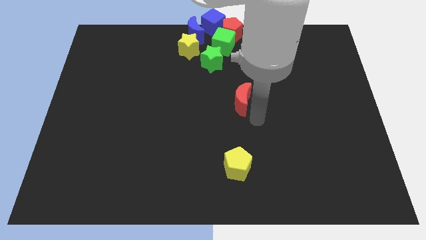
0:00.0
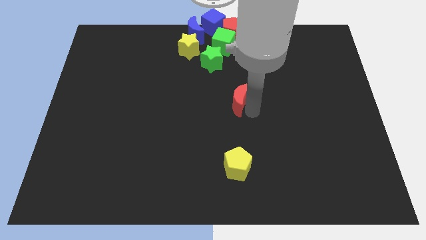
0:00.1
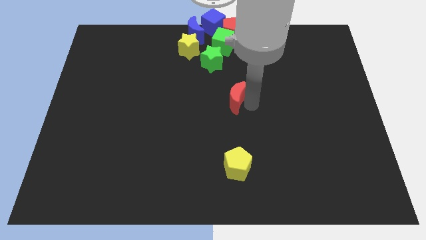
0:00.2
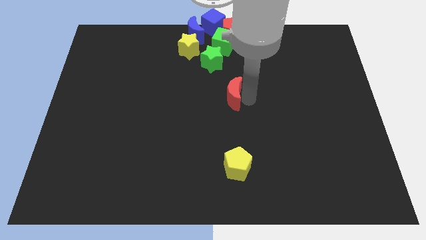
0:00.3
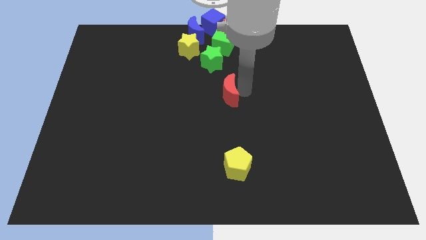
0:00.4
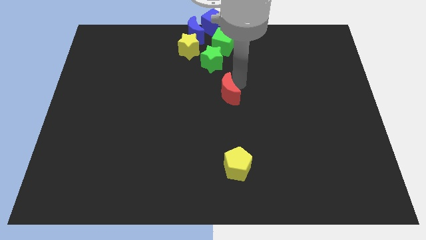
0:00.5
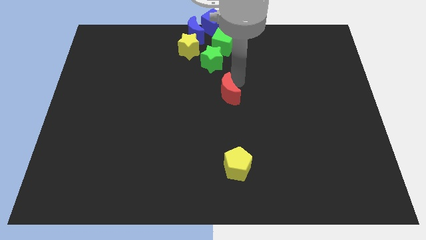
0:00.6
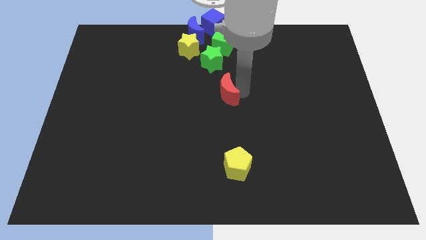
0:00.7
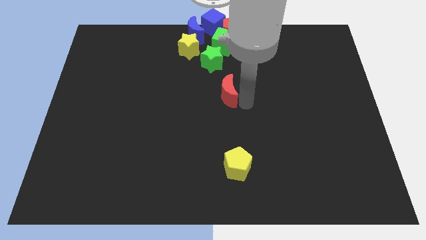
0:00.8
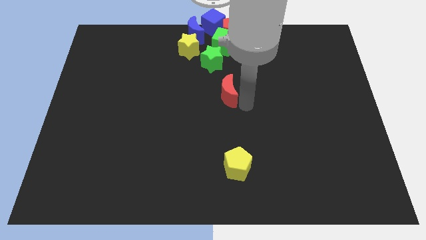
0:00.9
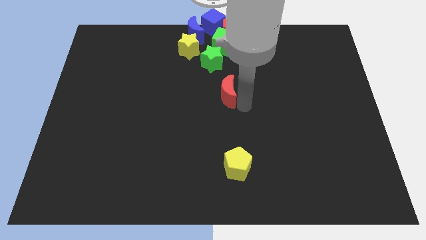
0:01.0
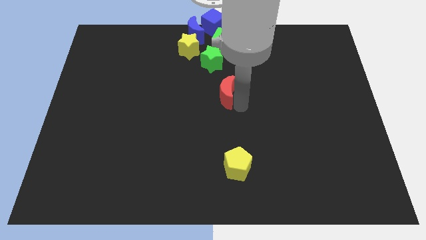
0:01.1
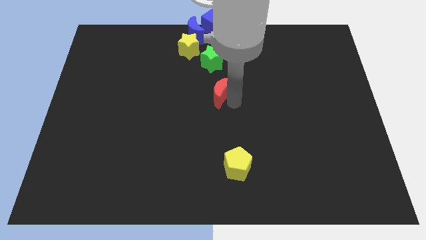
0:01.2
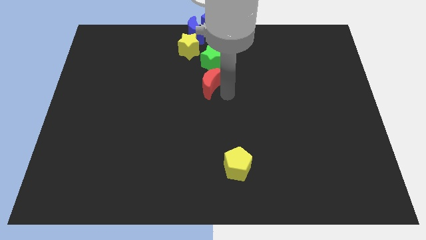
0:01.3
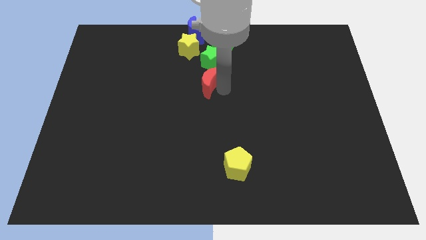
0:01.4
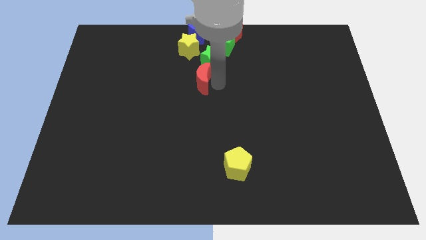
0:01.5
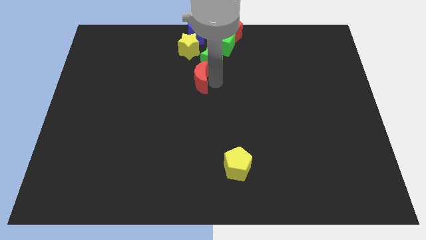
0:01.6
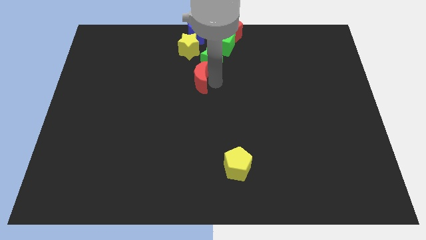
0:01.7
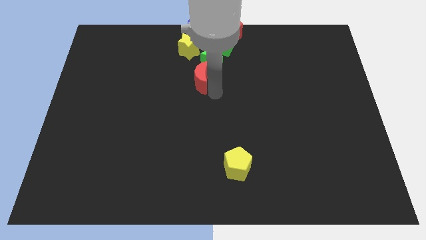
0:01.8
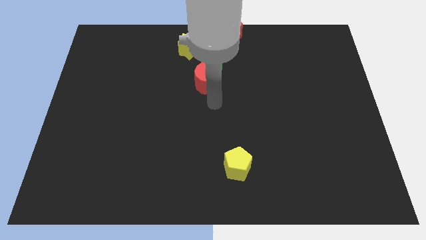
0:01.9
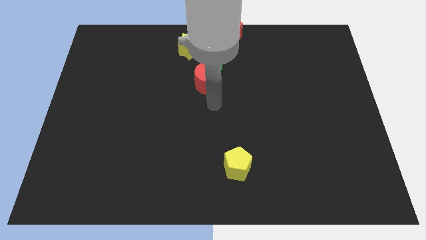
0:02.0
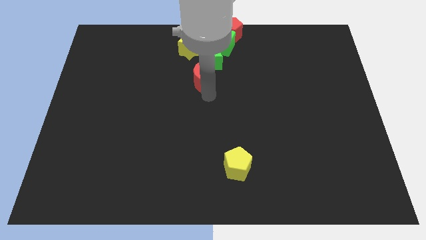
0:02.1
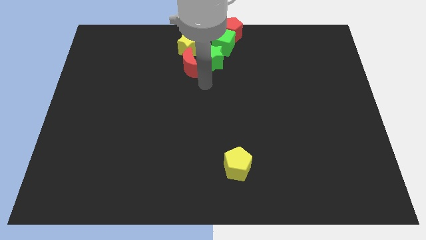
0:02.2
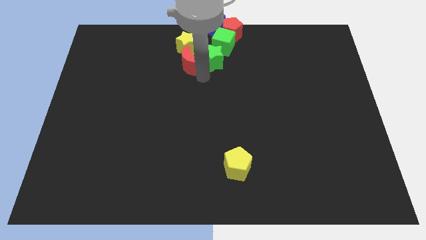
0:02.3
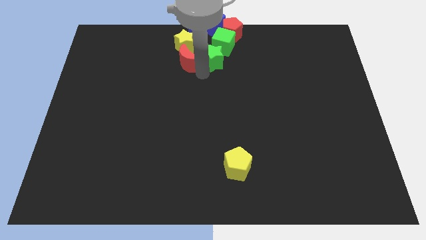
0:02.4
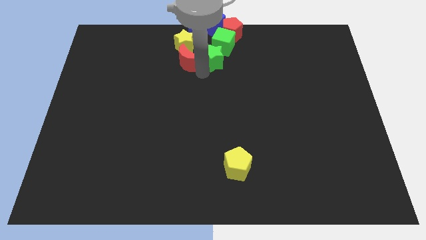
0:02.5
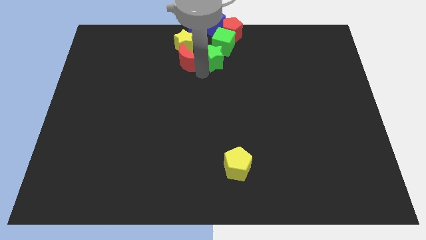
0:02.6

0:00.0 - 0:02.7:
move the red crescent left to the green star

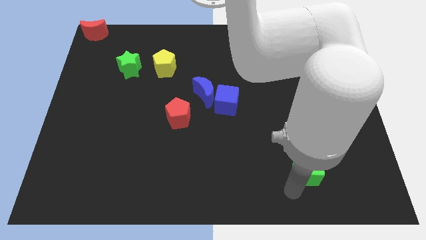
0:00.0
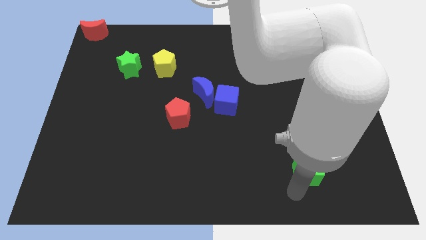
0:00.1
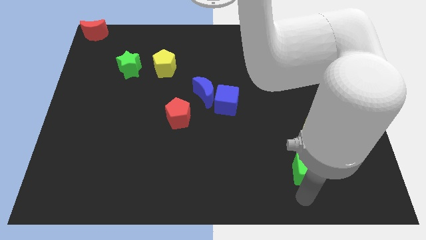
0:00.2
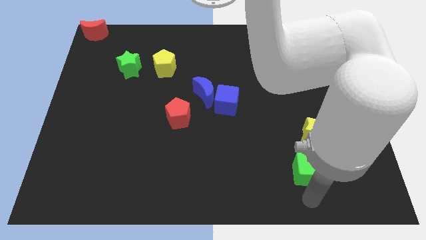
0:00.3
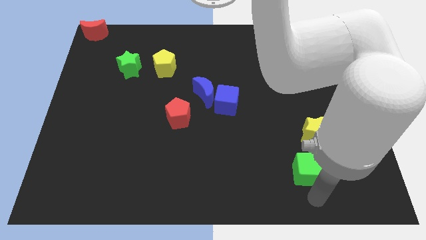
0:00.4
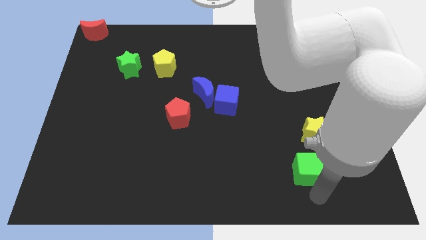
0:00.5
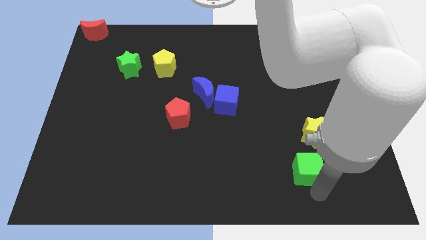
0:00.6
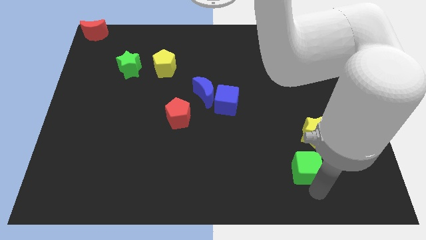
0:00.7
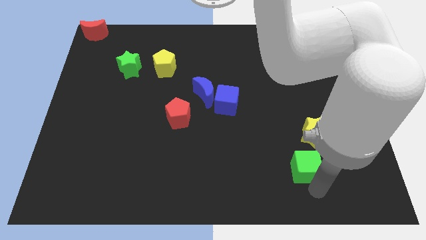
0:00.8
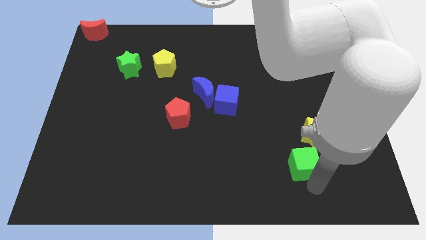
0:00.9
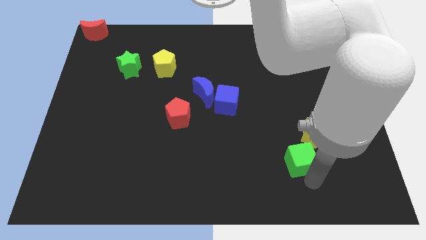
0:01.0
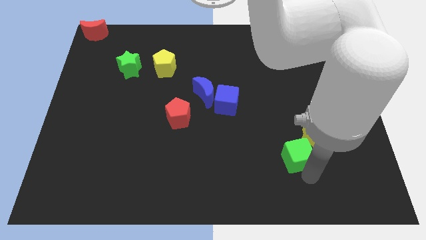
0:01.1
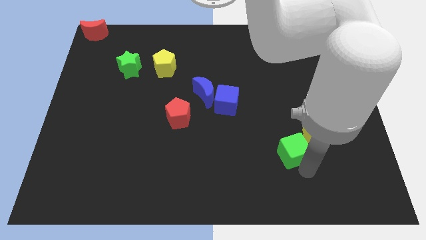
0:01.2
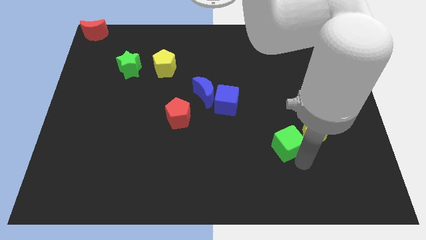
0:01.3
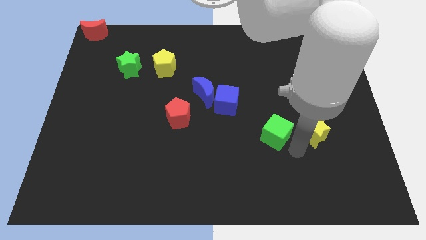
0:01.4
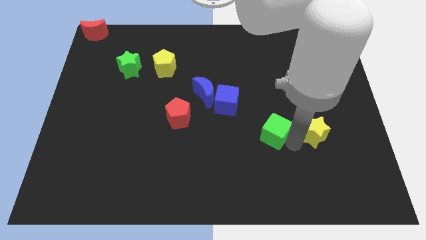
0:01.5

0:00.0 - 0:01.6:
place green cube beside yellow star

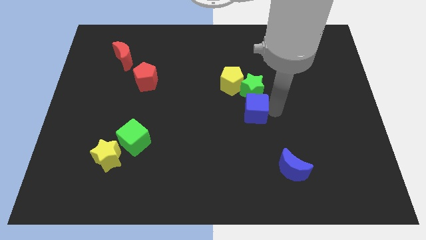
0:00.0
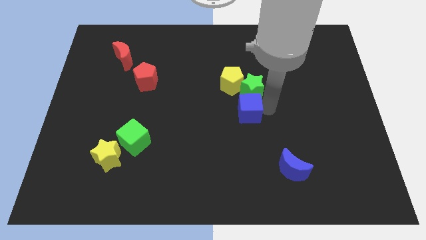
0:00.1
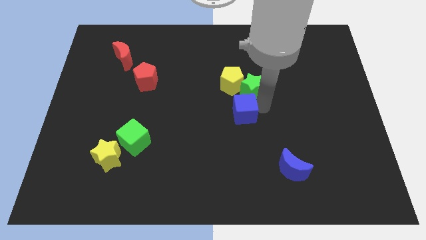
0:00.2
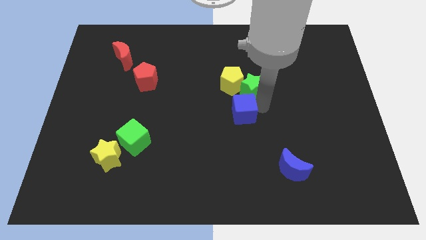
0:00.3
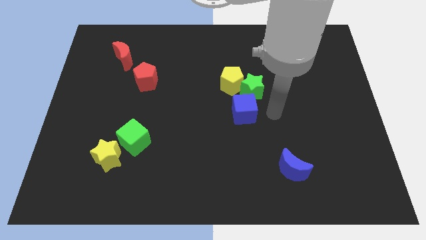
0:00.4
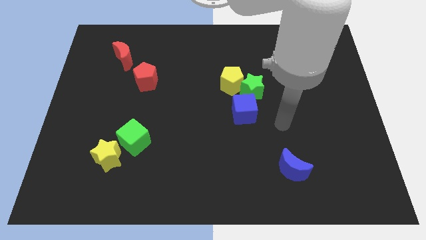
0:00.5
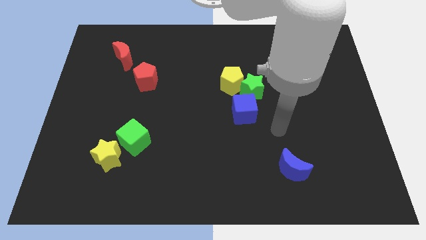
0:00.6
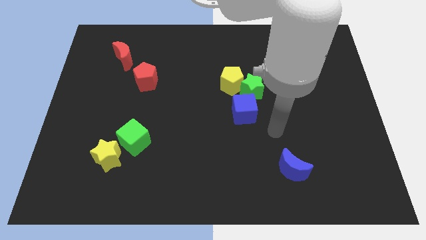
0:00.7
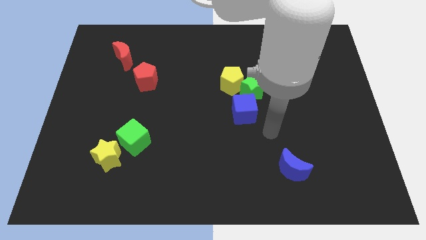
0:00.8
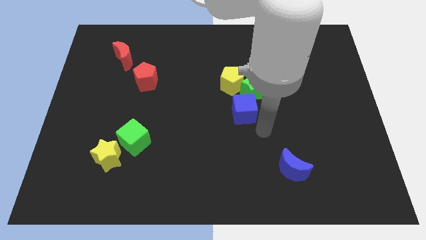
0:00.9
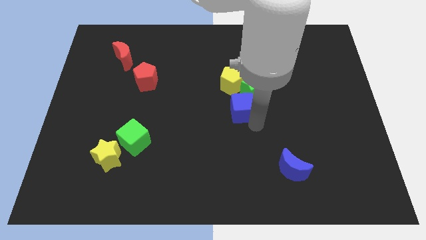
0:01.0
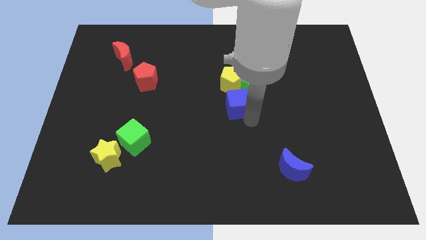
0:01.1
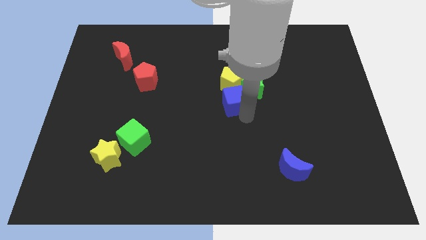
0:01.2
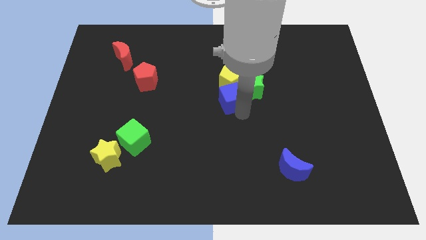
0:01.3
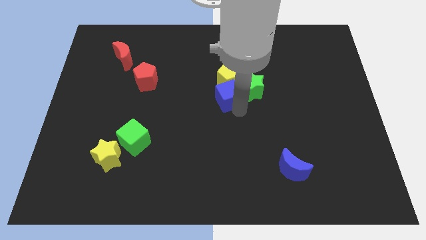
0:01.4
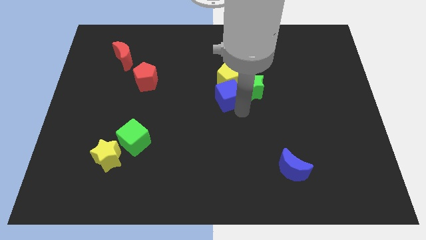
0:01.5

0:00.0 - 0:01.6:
push blue cube into yellow pentagon

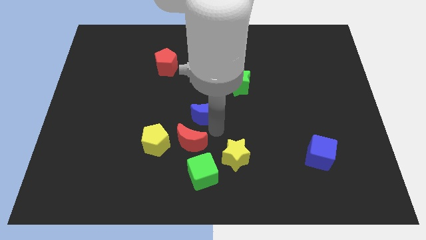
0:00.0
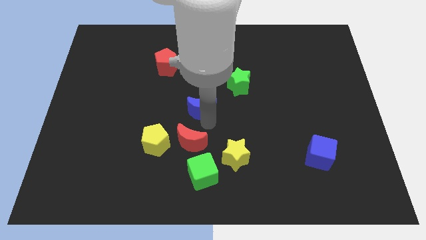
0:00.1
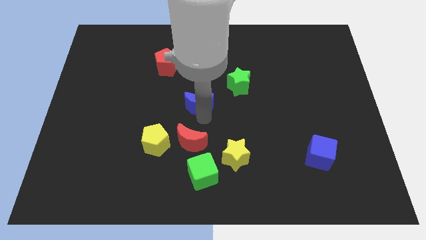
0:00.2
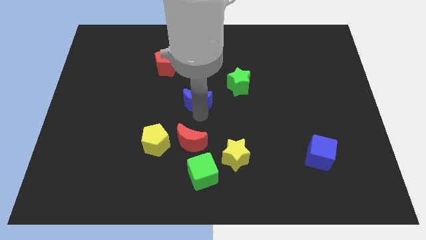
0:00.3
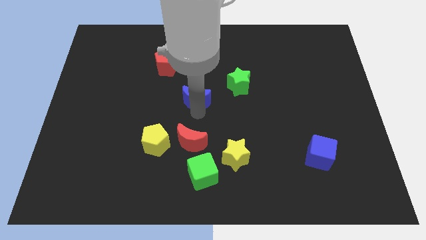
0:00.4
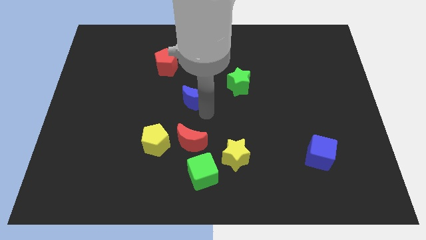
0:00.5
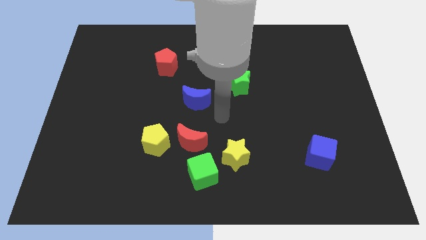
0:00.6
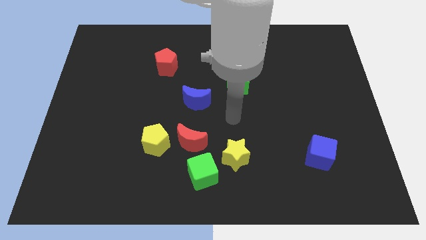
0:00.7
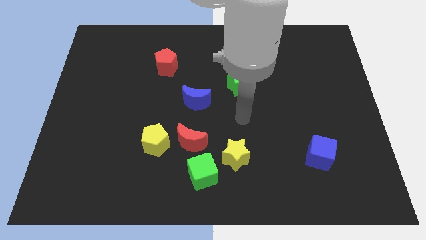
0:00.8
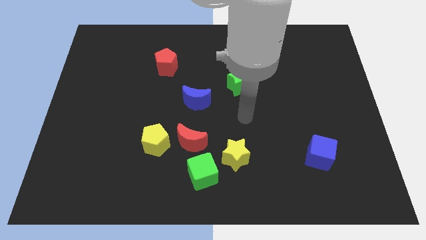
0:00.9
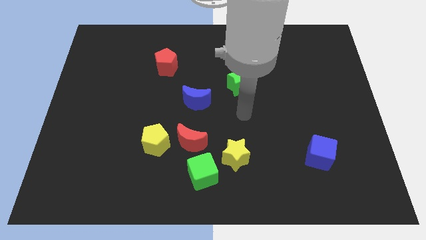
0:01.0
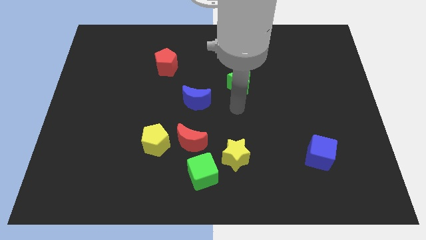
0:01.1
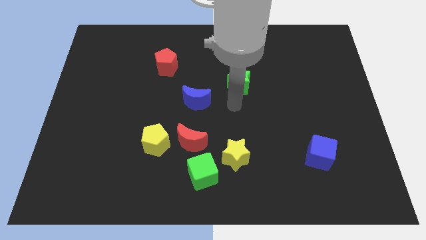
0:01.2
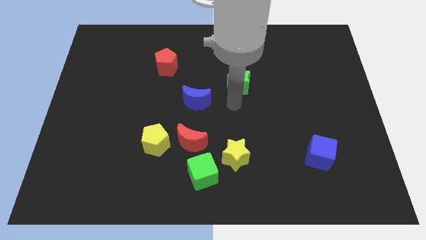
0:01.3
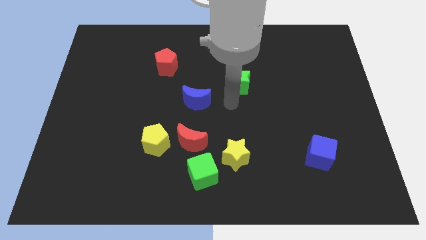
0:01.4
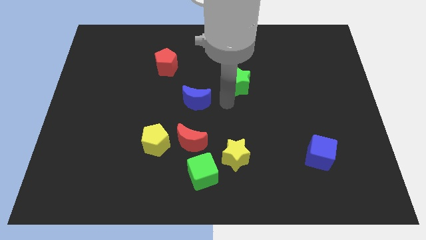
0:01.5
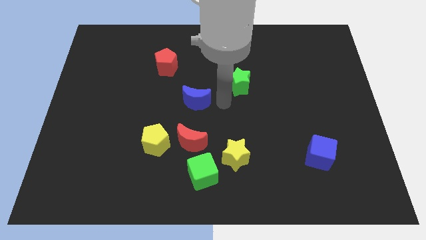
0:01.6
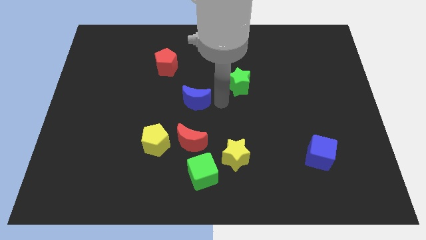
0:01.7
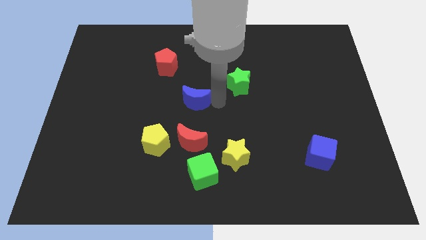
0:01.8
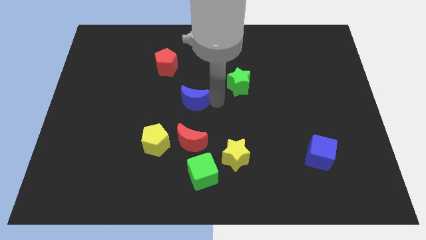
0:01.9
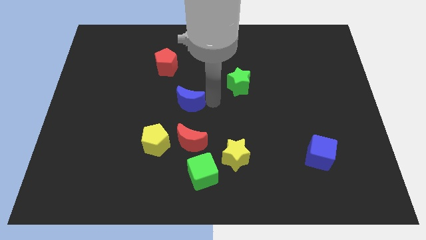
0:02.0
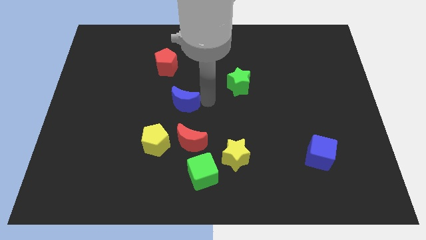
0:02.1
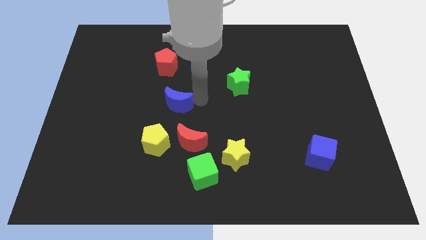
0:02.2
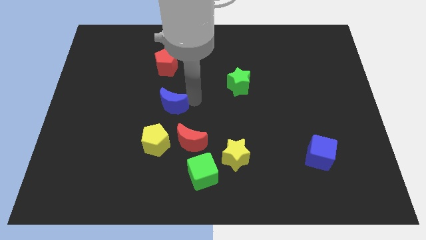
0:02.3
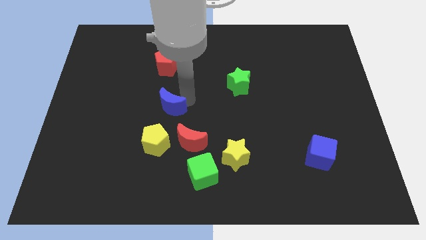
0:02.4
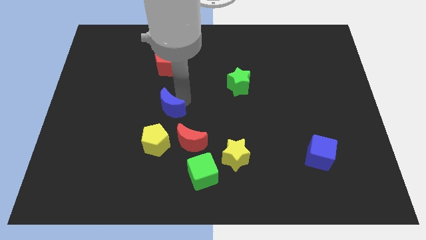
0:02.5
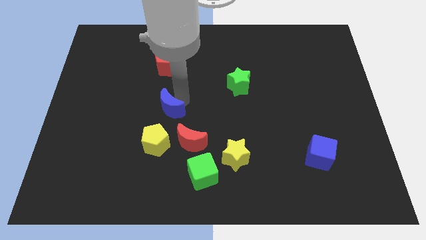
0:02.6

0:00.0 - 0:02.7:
push blue crescent below red pentagon

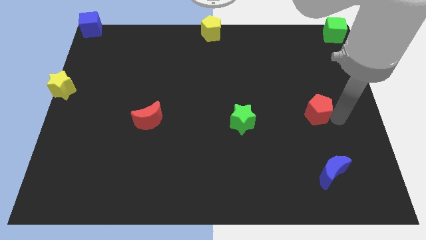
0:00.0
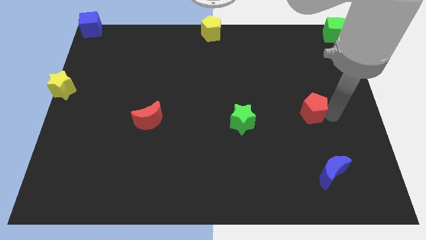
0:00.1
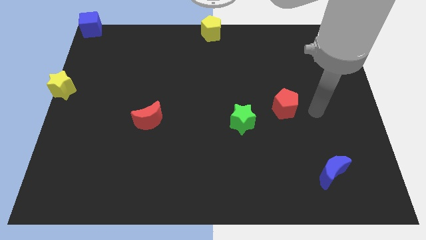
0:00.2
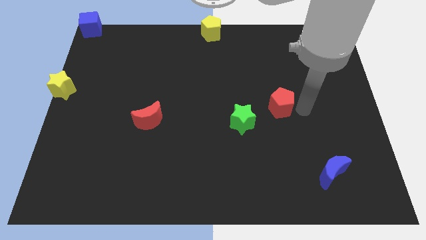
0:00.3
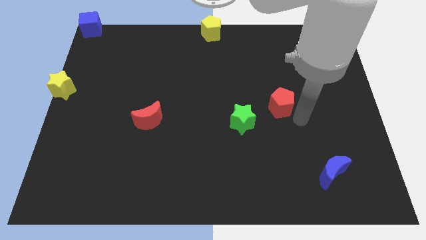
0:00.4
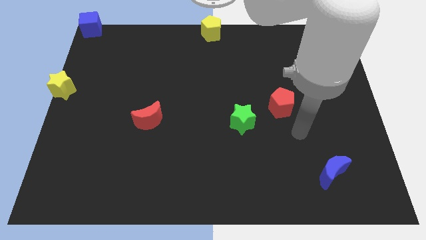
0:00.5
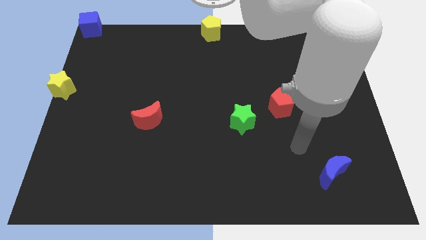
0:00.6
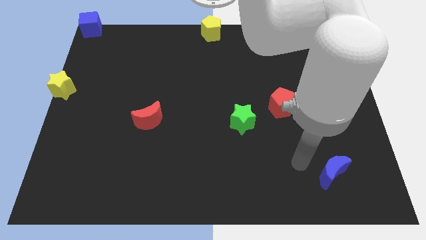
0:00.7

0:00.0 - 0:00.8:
push the red pentagon diagonally to the top right side of the green star
